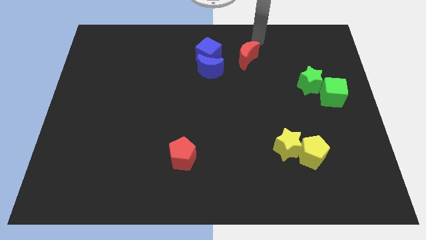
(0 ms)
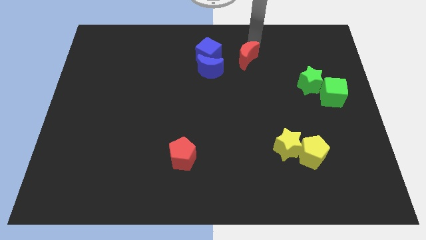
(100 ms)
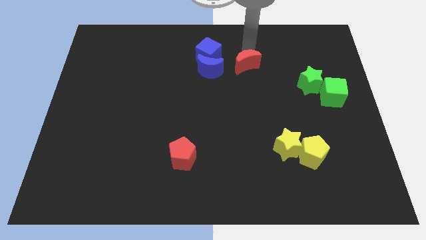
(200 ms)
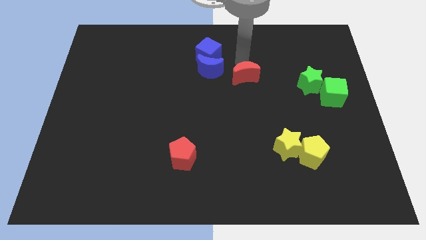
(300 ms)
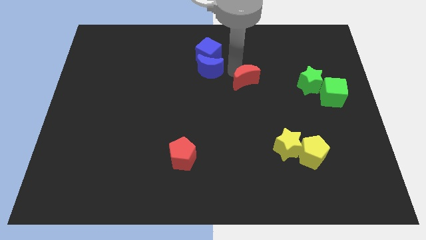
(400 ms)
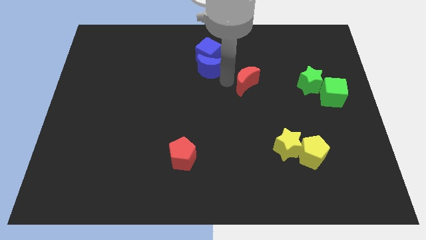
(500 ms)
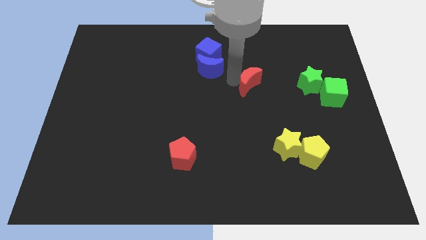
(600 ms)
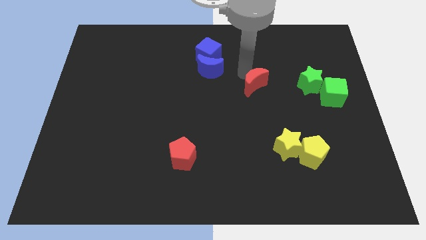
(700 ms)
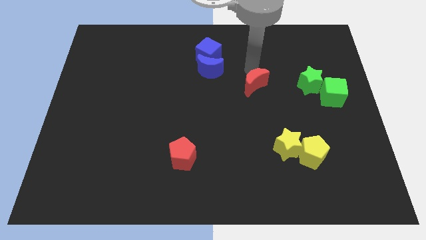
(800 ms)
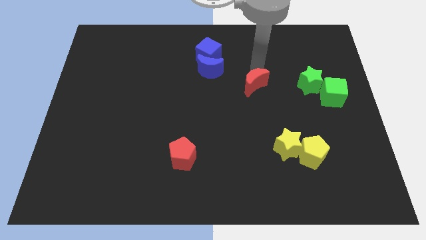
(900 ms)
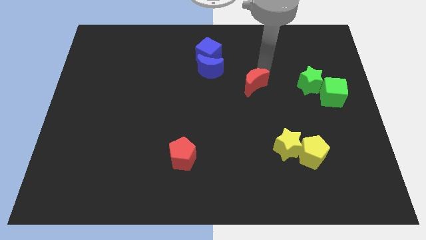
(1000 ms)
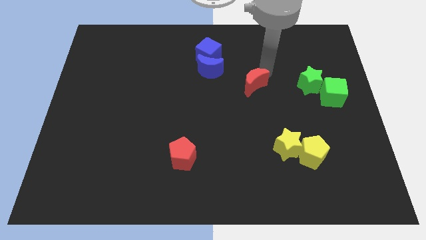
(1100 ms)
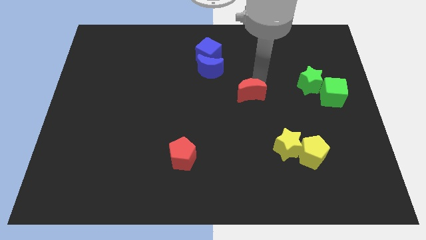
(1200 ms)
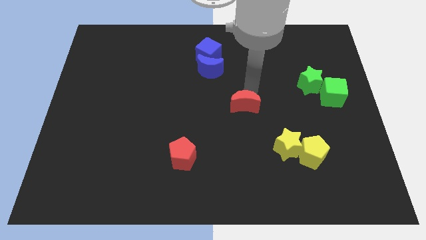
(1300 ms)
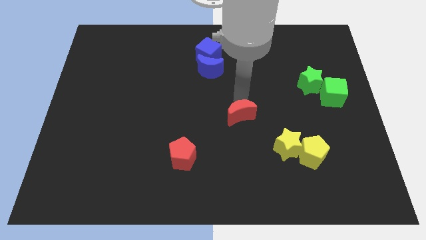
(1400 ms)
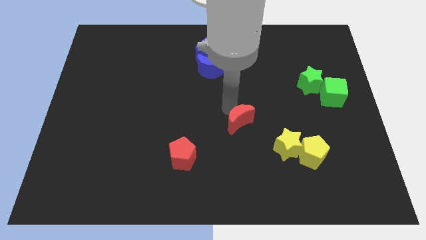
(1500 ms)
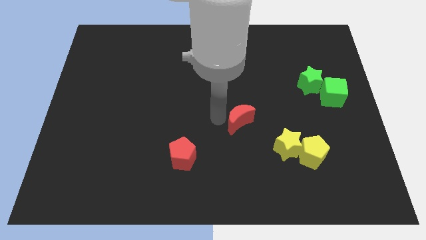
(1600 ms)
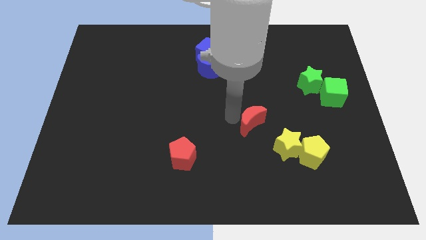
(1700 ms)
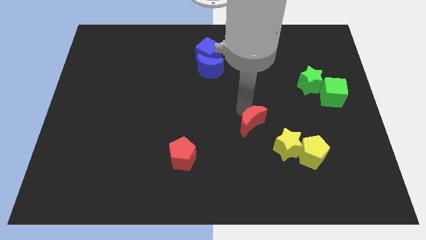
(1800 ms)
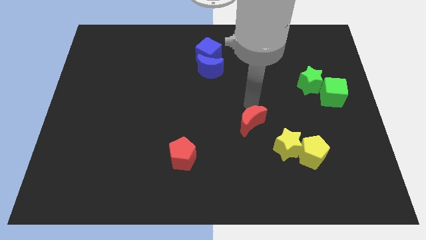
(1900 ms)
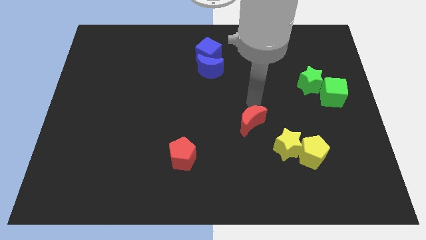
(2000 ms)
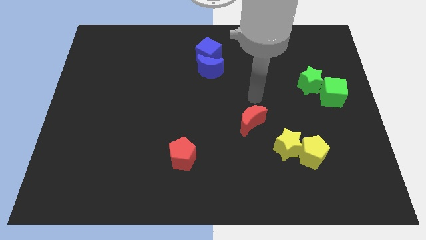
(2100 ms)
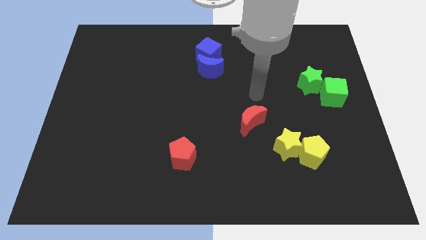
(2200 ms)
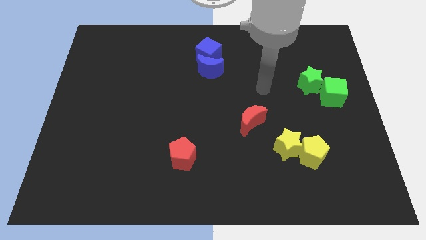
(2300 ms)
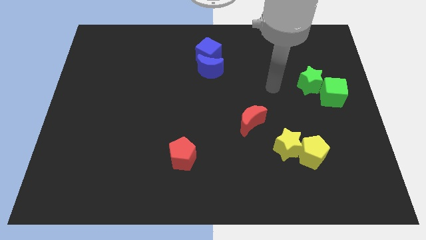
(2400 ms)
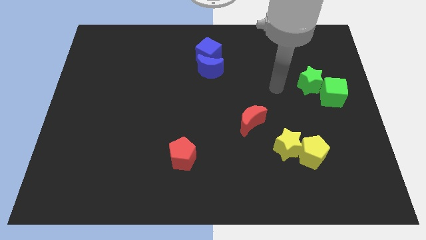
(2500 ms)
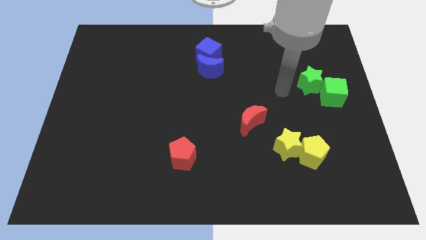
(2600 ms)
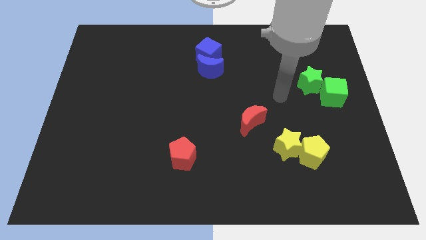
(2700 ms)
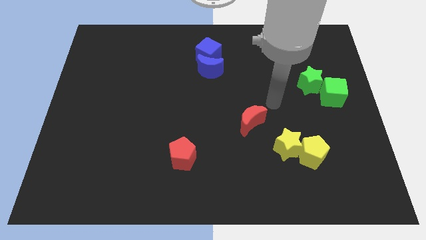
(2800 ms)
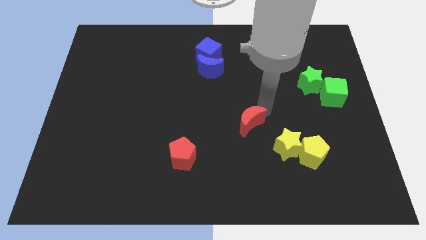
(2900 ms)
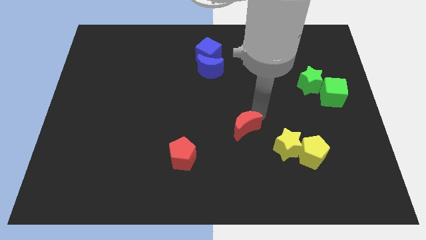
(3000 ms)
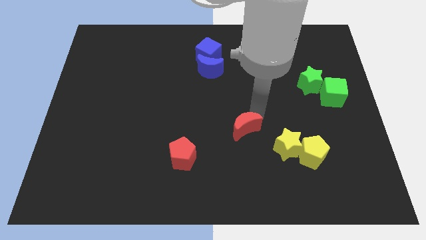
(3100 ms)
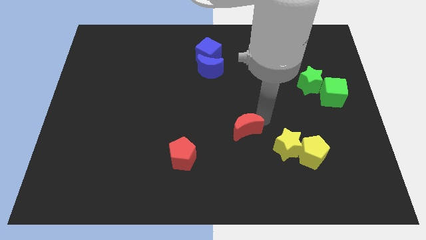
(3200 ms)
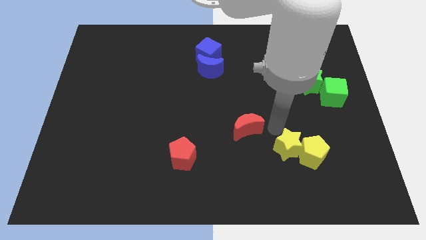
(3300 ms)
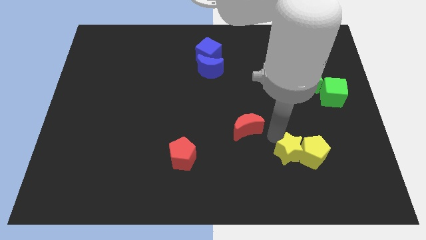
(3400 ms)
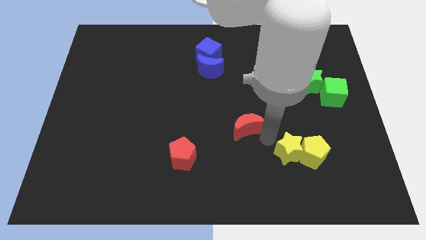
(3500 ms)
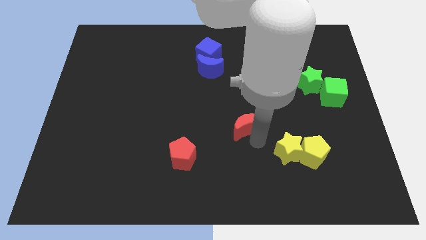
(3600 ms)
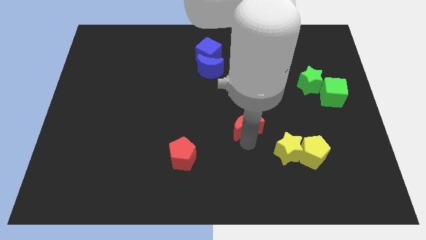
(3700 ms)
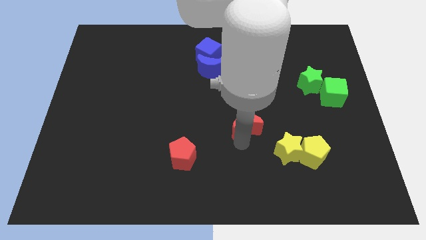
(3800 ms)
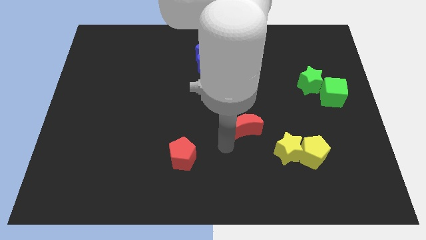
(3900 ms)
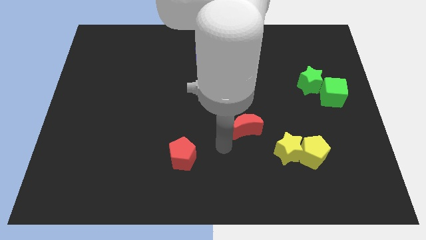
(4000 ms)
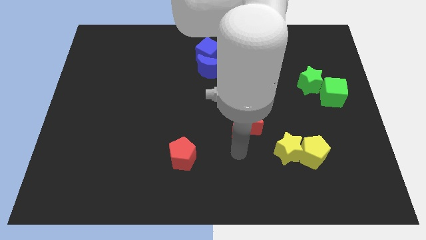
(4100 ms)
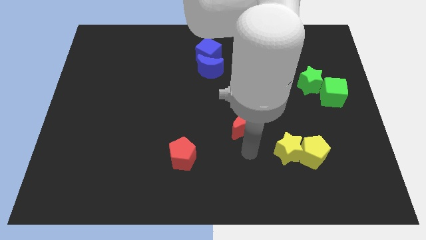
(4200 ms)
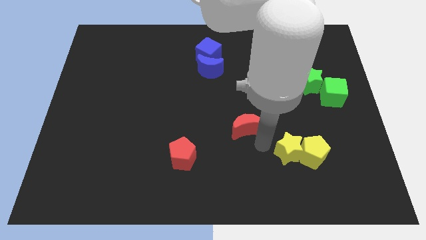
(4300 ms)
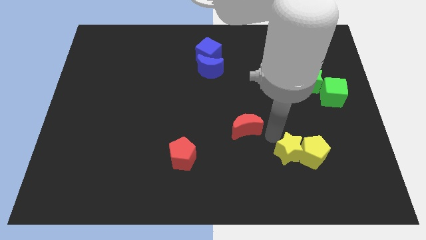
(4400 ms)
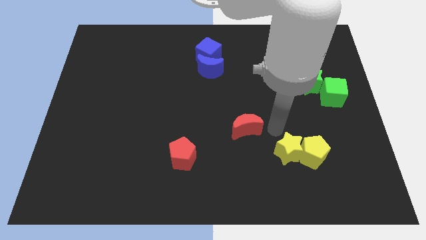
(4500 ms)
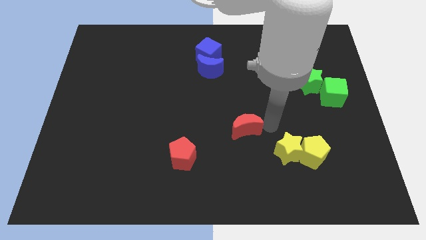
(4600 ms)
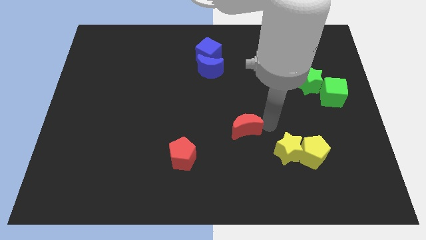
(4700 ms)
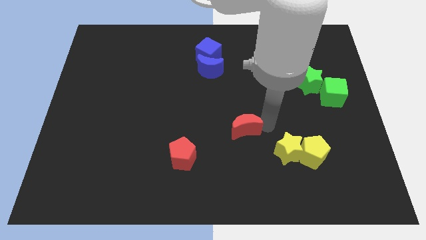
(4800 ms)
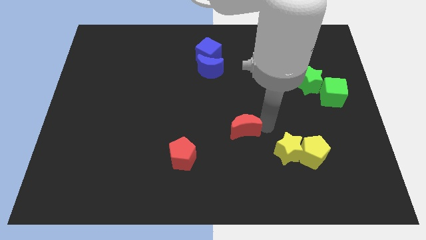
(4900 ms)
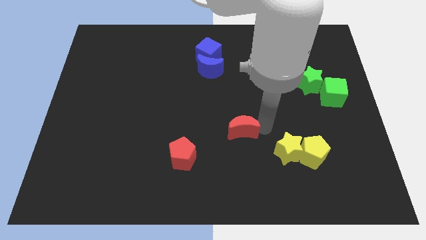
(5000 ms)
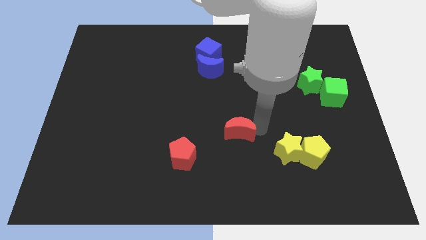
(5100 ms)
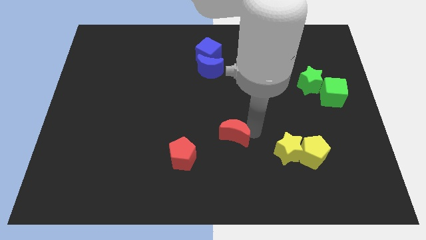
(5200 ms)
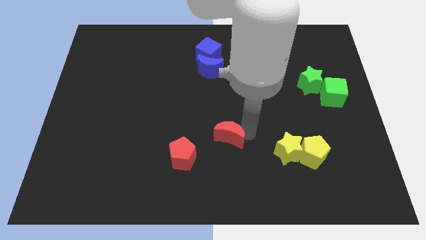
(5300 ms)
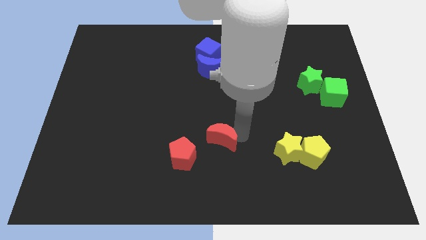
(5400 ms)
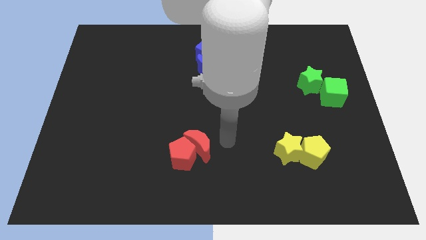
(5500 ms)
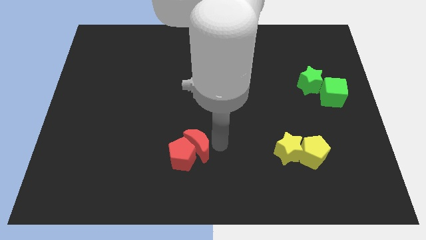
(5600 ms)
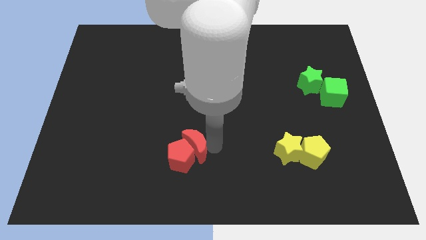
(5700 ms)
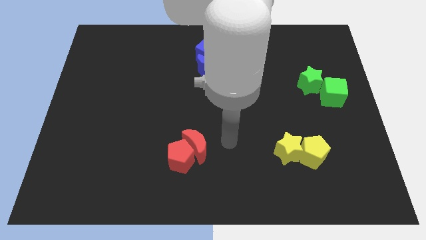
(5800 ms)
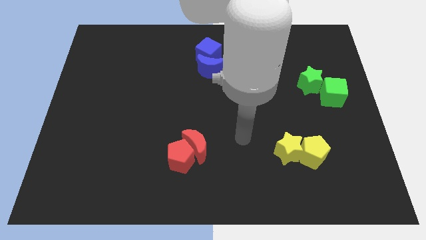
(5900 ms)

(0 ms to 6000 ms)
push the red moon into red pentagon

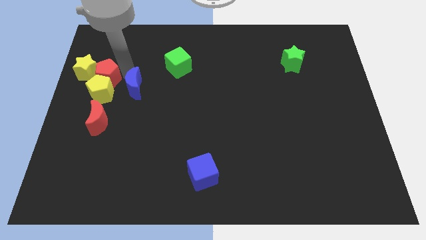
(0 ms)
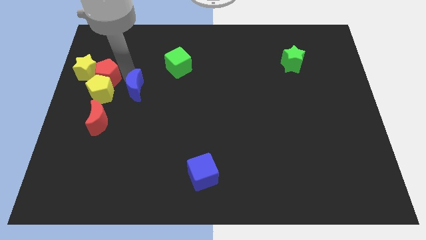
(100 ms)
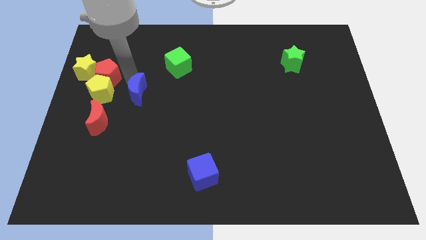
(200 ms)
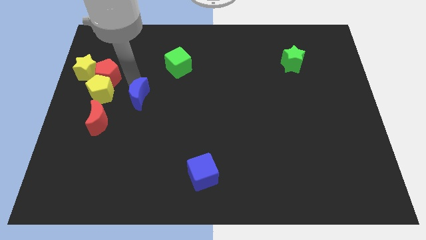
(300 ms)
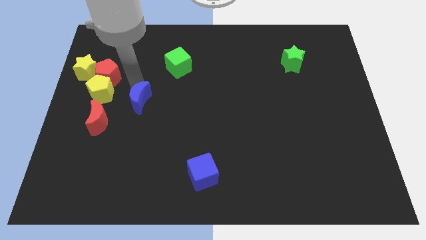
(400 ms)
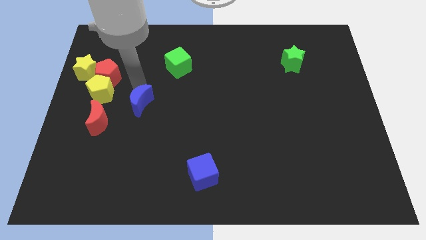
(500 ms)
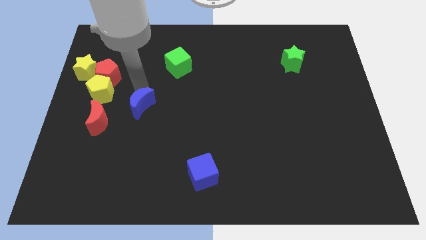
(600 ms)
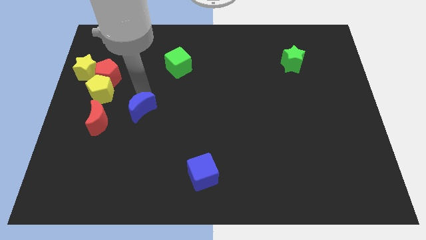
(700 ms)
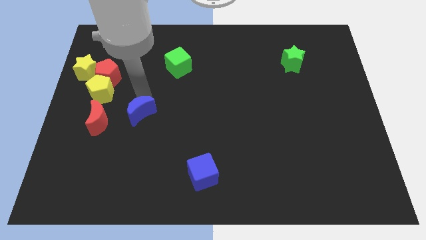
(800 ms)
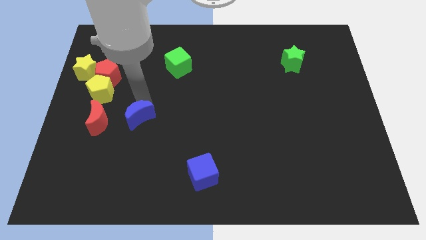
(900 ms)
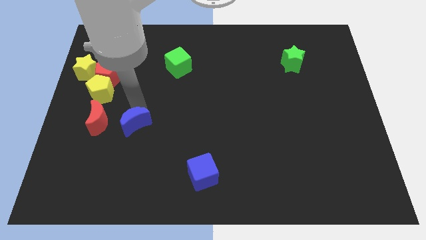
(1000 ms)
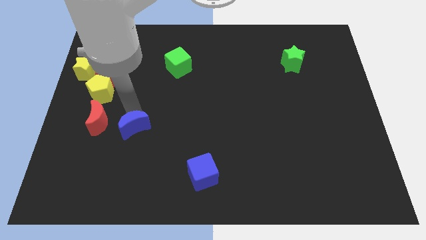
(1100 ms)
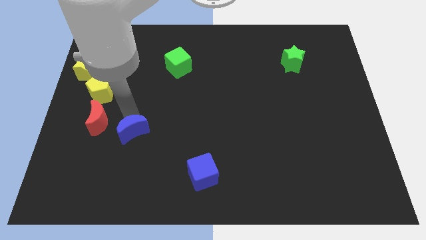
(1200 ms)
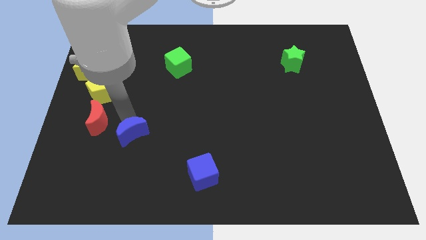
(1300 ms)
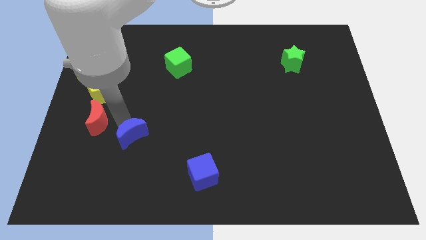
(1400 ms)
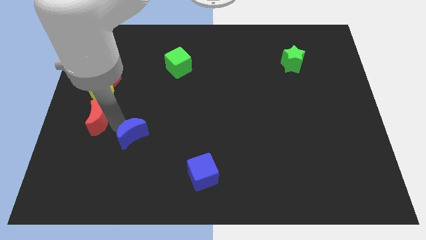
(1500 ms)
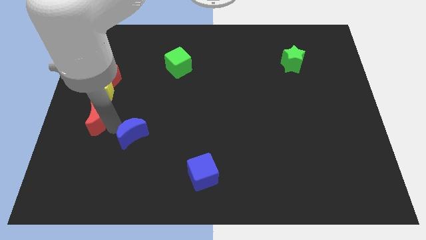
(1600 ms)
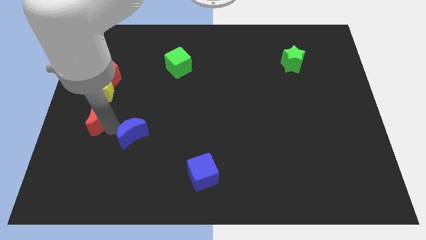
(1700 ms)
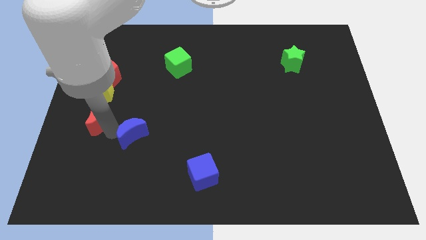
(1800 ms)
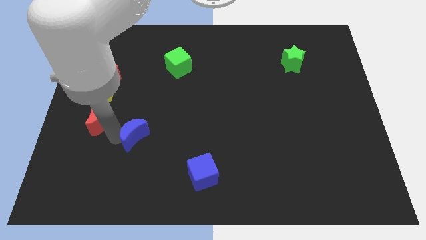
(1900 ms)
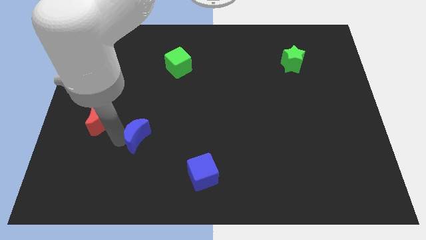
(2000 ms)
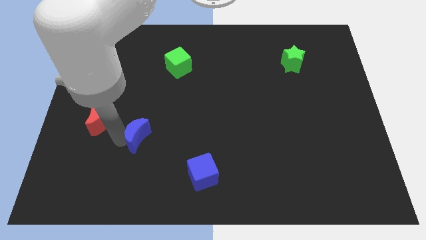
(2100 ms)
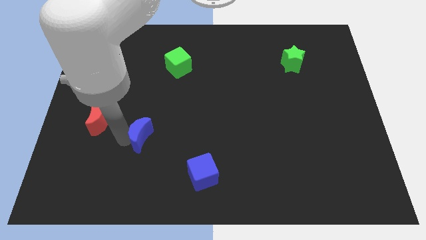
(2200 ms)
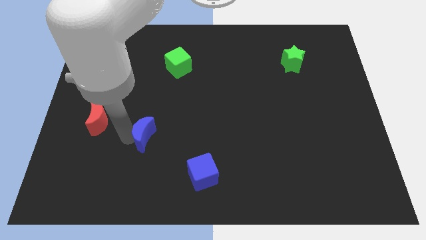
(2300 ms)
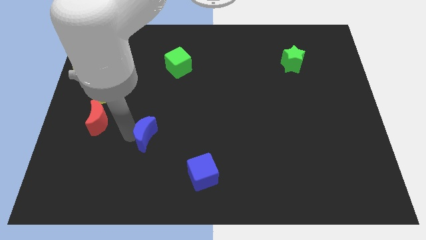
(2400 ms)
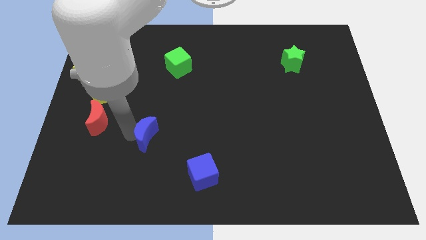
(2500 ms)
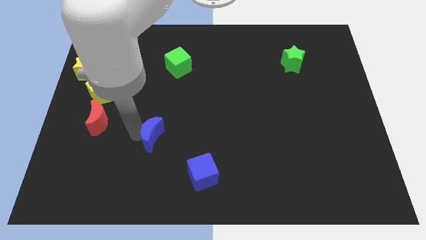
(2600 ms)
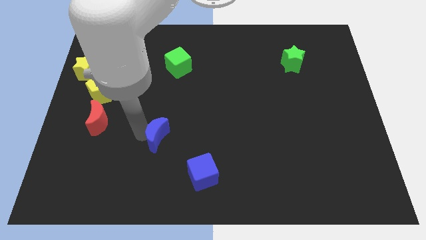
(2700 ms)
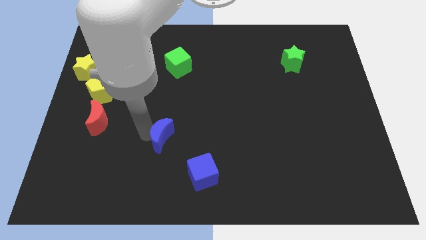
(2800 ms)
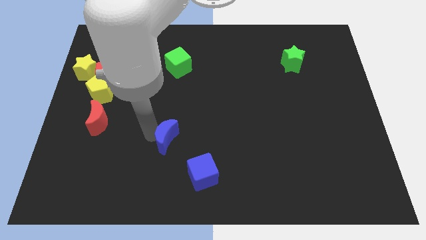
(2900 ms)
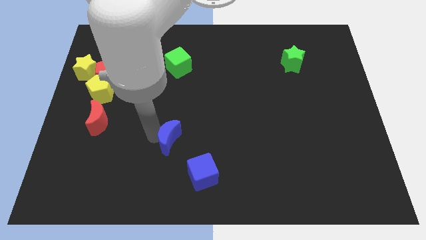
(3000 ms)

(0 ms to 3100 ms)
separate blue moon from red pentagon
